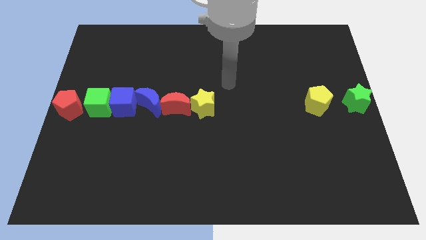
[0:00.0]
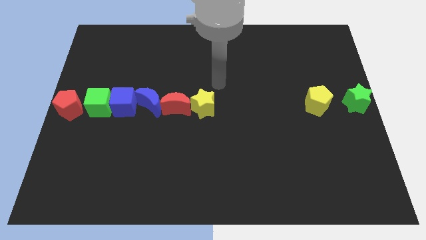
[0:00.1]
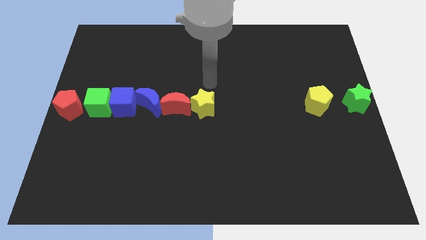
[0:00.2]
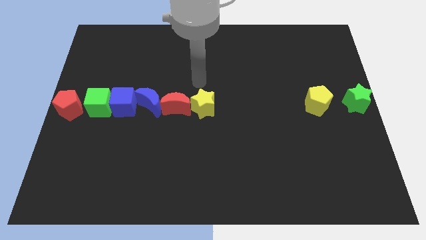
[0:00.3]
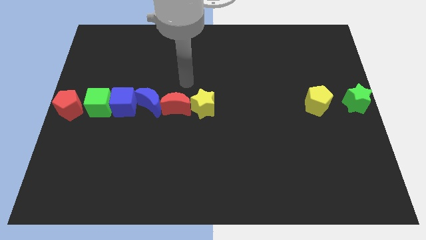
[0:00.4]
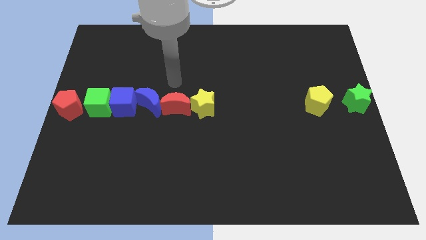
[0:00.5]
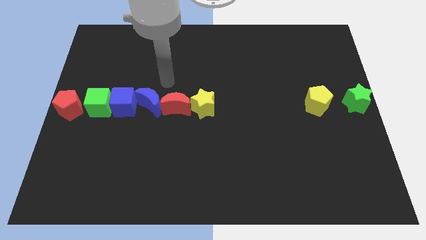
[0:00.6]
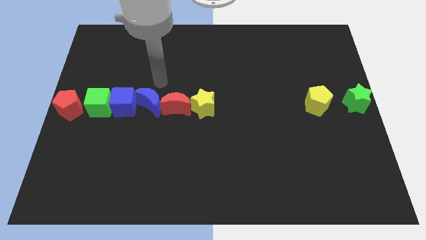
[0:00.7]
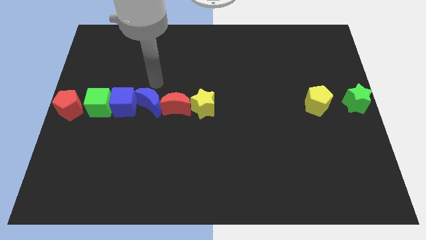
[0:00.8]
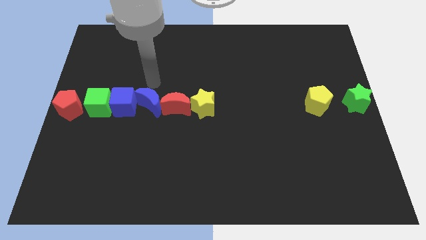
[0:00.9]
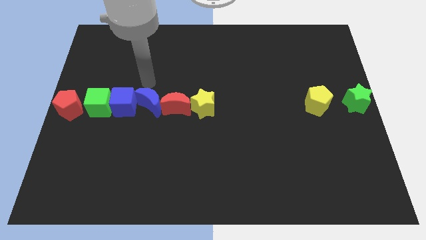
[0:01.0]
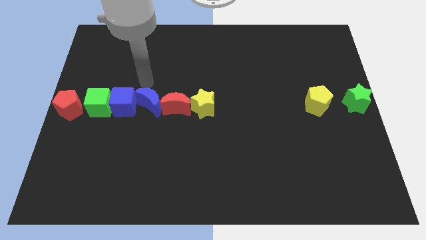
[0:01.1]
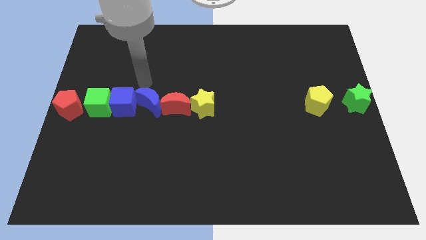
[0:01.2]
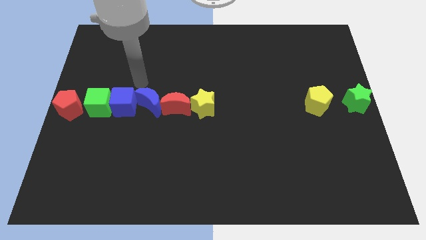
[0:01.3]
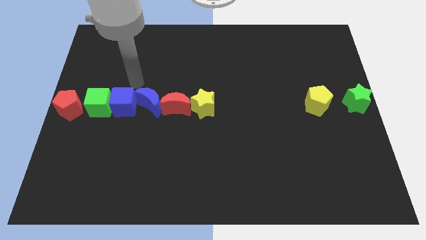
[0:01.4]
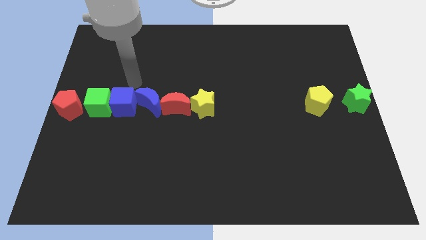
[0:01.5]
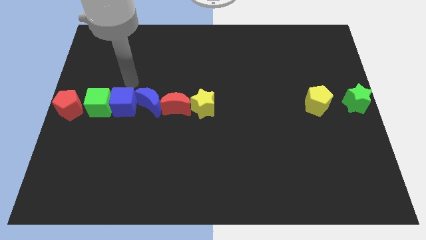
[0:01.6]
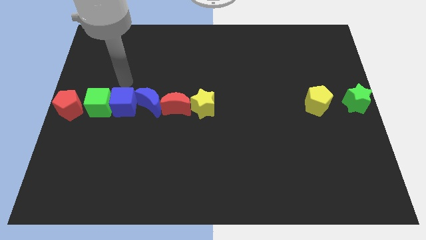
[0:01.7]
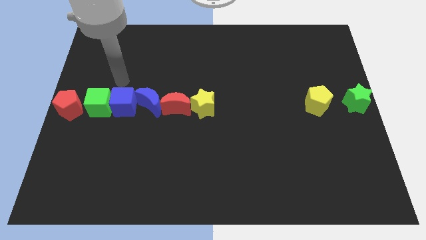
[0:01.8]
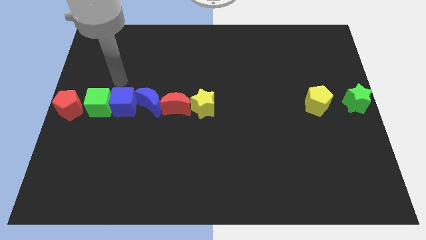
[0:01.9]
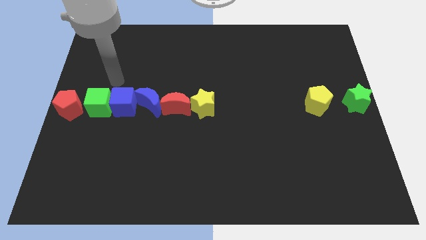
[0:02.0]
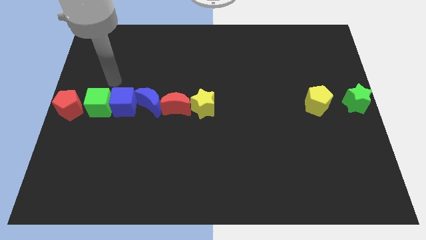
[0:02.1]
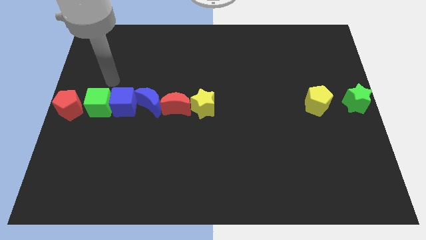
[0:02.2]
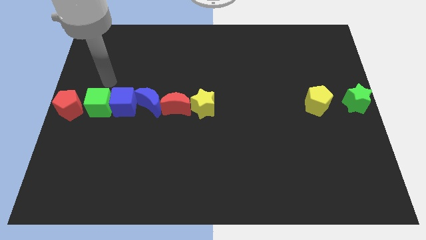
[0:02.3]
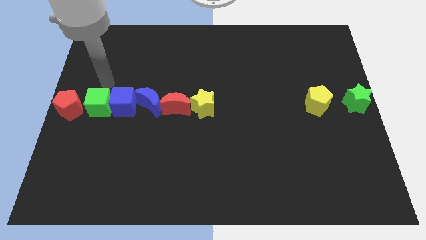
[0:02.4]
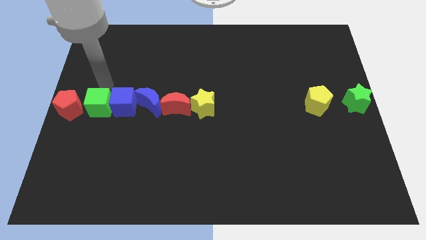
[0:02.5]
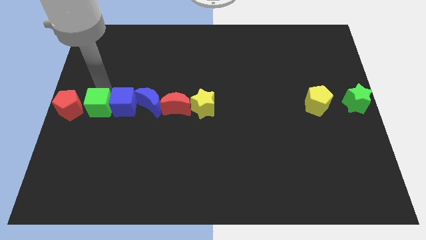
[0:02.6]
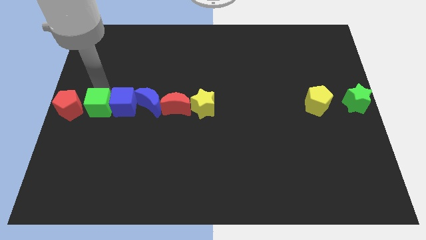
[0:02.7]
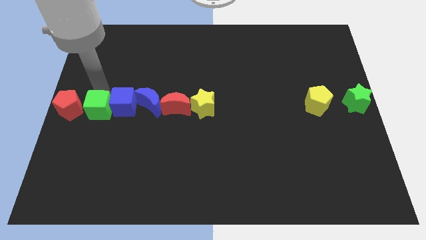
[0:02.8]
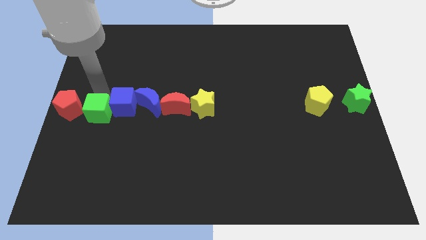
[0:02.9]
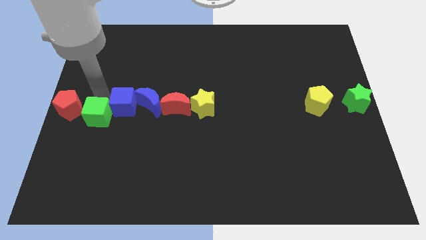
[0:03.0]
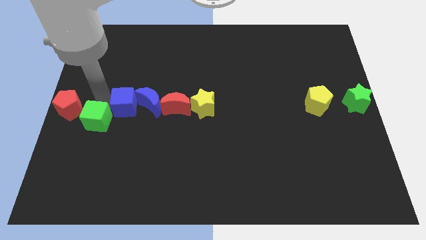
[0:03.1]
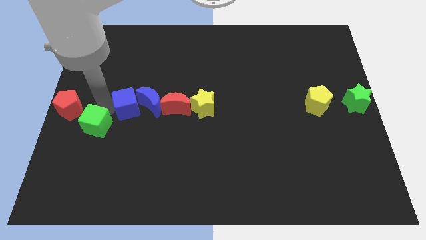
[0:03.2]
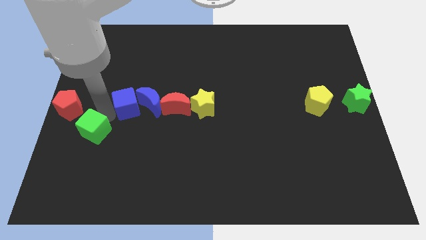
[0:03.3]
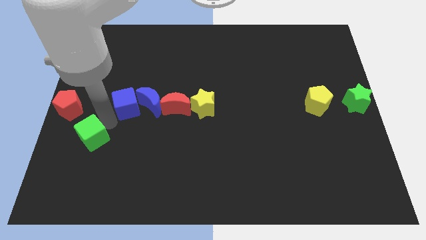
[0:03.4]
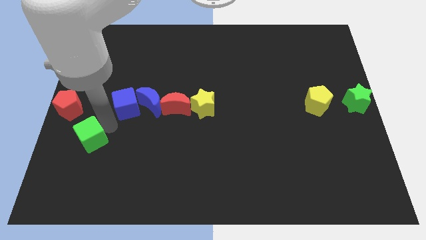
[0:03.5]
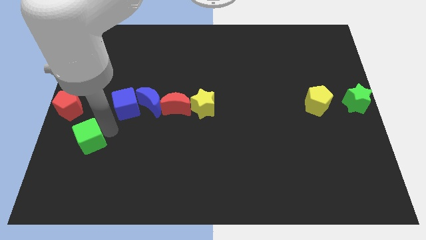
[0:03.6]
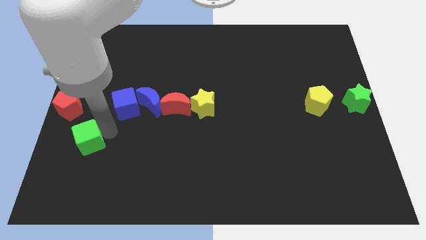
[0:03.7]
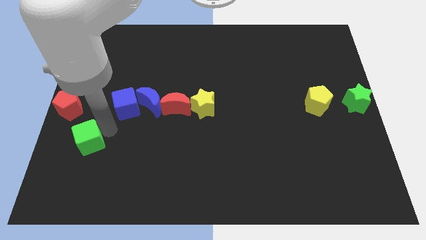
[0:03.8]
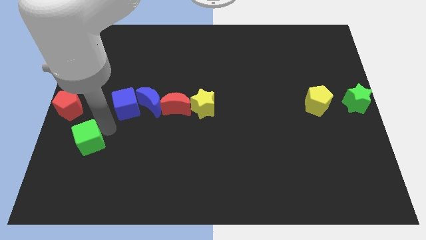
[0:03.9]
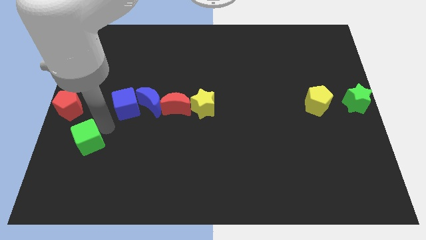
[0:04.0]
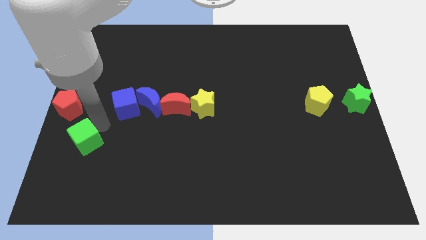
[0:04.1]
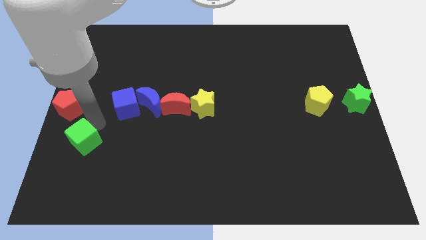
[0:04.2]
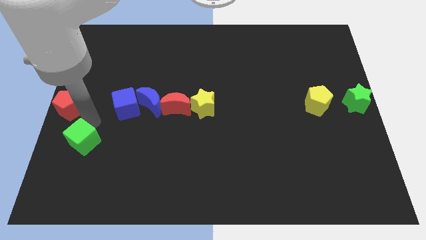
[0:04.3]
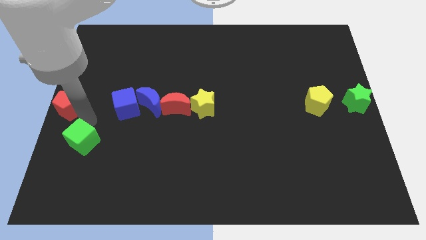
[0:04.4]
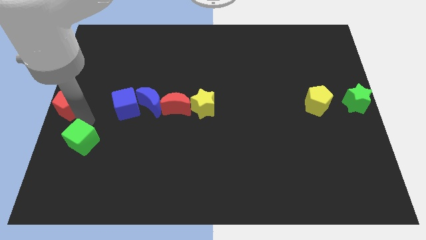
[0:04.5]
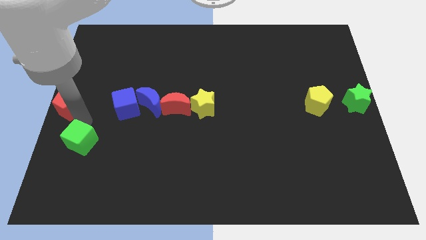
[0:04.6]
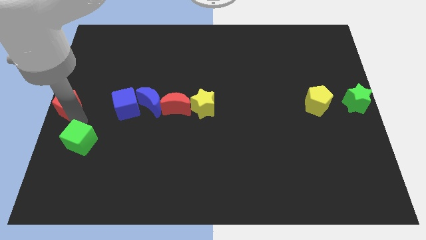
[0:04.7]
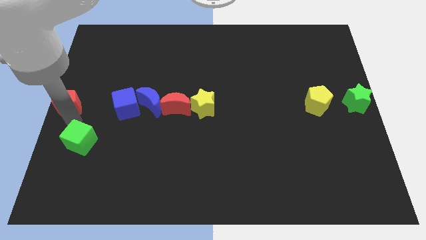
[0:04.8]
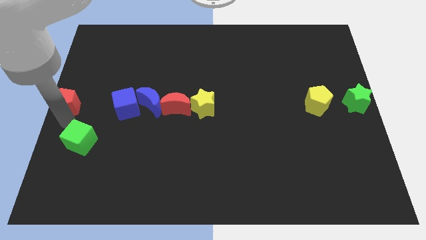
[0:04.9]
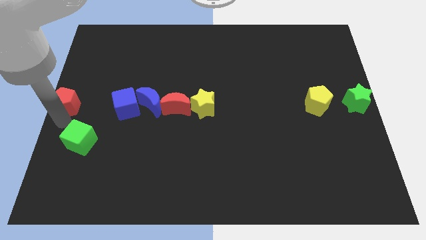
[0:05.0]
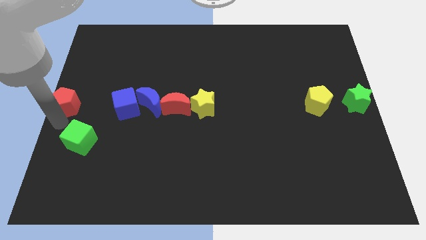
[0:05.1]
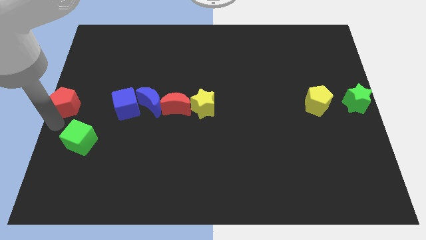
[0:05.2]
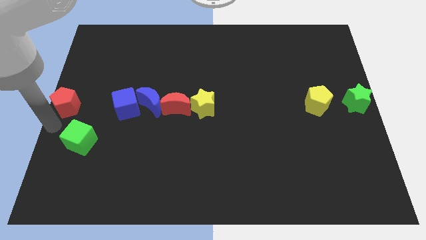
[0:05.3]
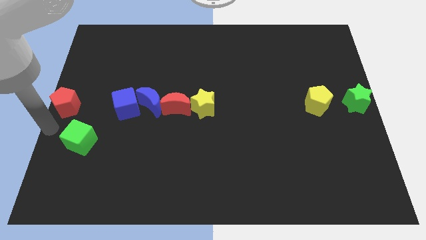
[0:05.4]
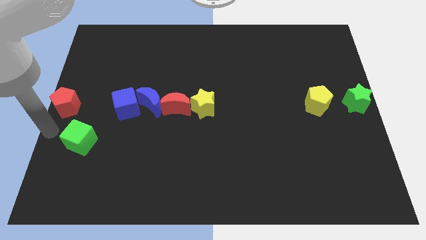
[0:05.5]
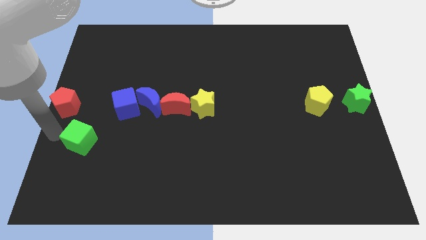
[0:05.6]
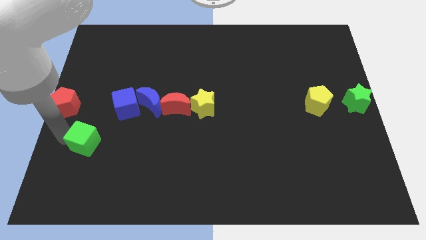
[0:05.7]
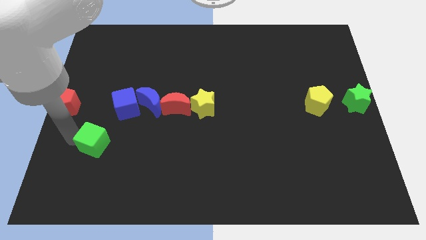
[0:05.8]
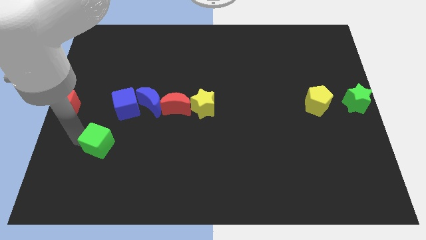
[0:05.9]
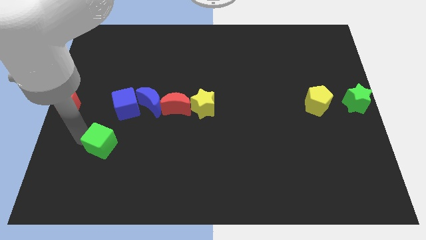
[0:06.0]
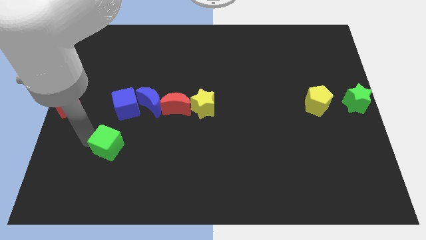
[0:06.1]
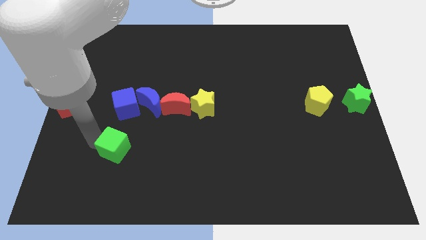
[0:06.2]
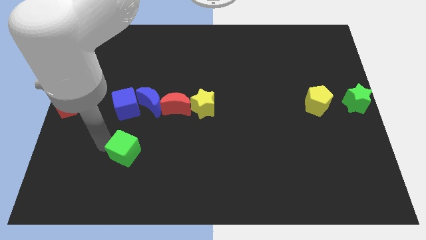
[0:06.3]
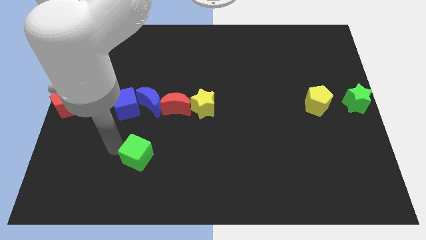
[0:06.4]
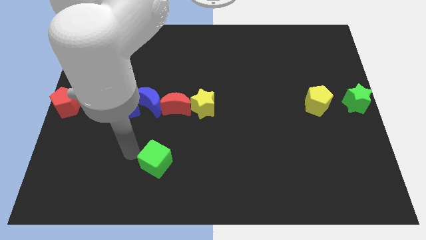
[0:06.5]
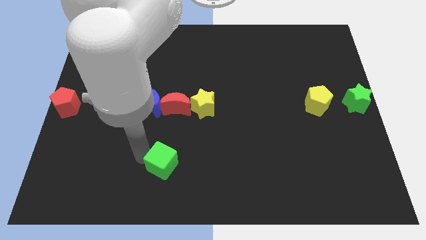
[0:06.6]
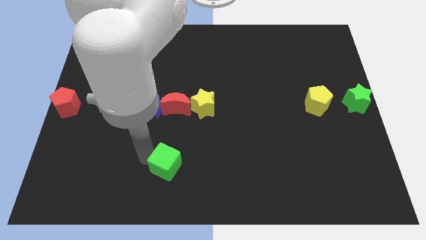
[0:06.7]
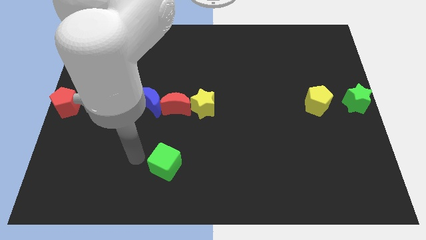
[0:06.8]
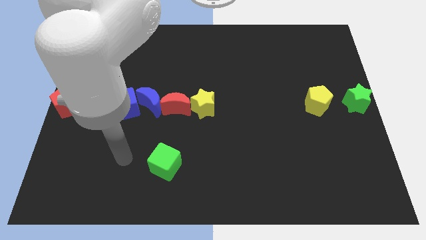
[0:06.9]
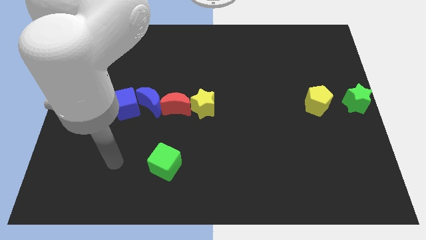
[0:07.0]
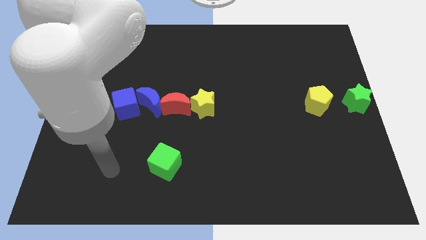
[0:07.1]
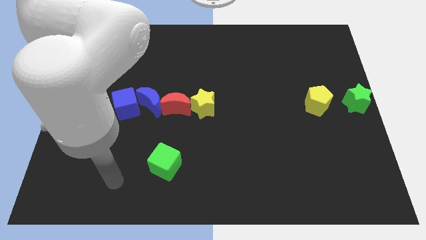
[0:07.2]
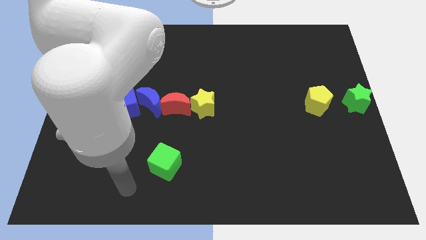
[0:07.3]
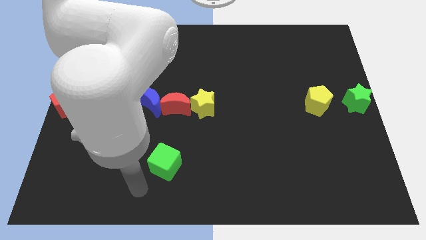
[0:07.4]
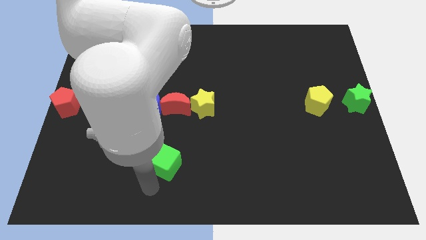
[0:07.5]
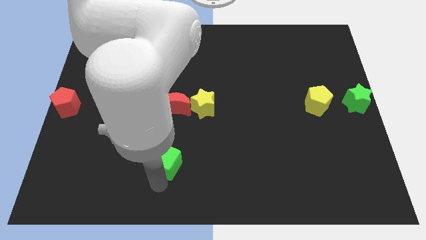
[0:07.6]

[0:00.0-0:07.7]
separate the green cube from the group of blocks

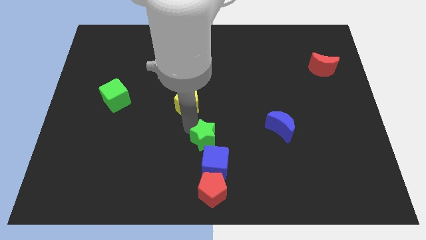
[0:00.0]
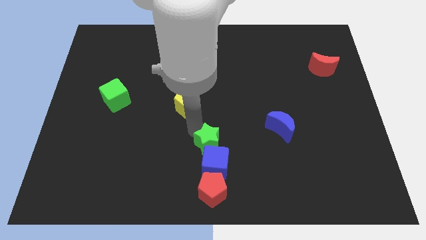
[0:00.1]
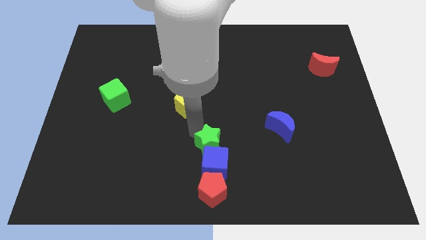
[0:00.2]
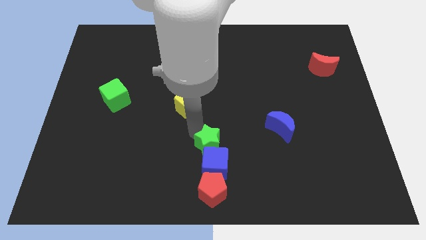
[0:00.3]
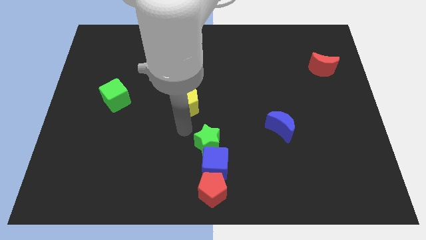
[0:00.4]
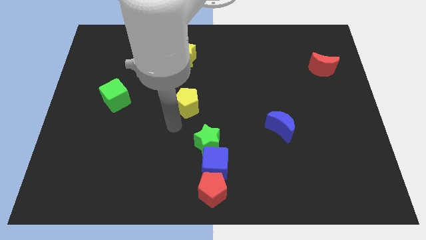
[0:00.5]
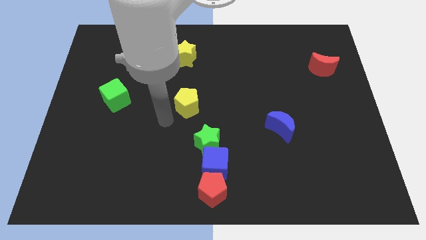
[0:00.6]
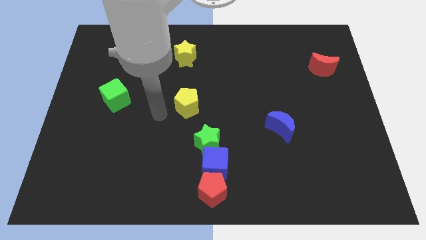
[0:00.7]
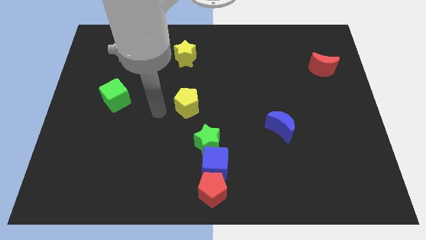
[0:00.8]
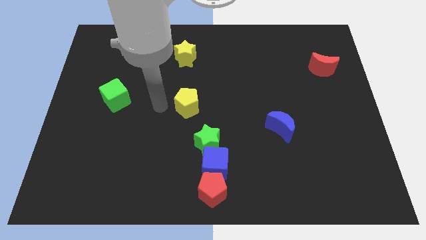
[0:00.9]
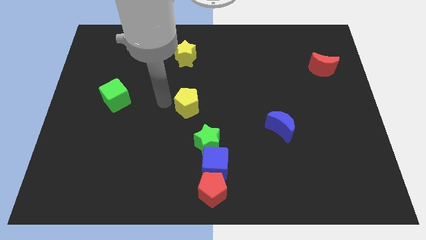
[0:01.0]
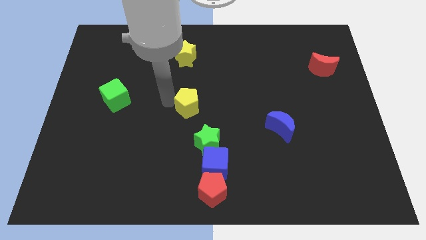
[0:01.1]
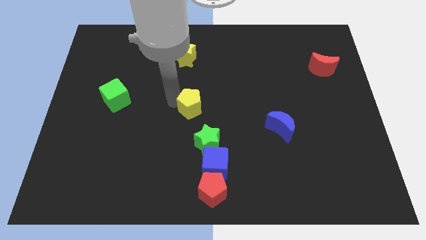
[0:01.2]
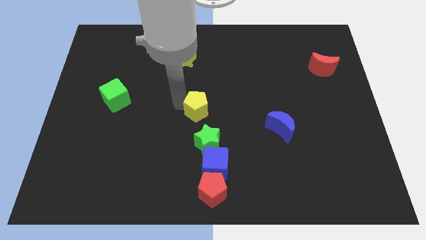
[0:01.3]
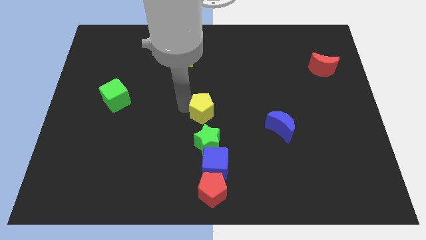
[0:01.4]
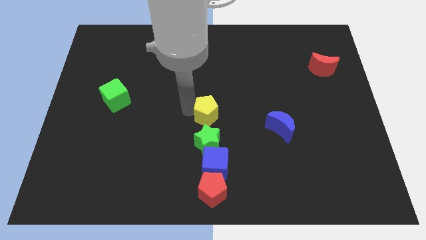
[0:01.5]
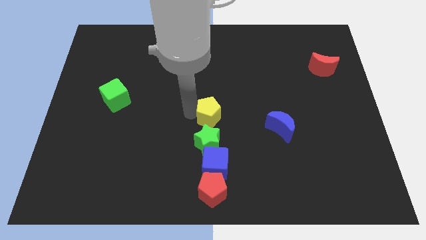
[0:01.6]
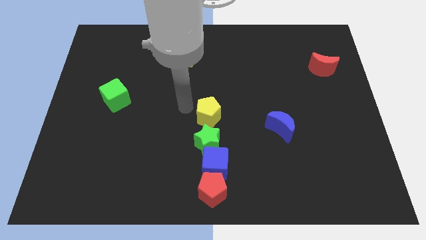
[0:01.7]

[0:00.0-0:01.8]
move the yellow pentagon to the center of the board
